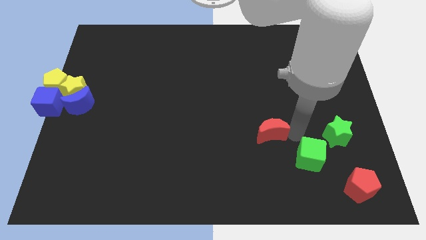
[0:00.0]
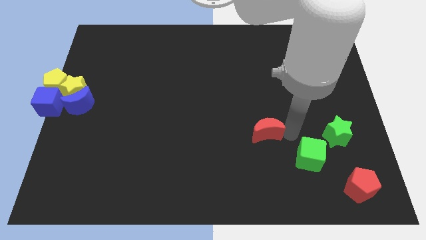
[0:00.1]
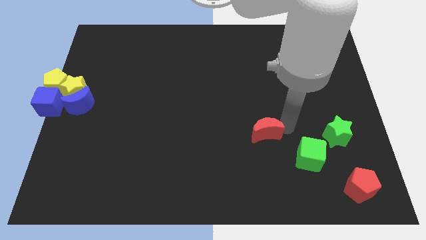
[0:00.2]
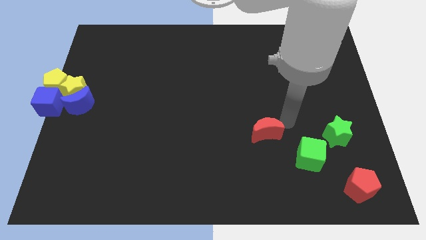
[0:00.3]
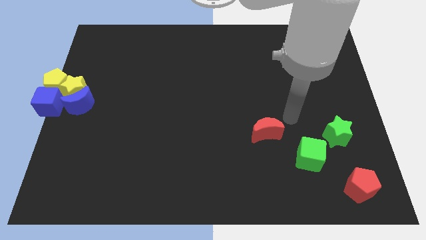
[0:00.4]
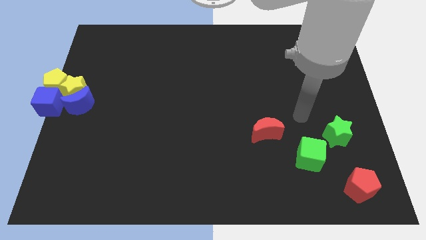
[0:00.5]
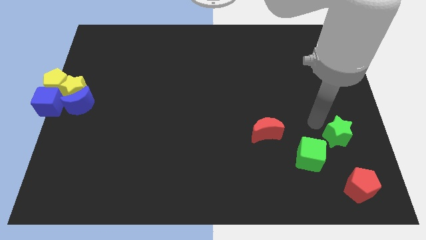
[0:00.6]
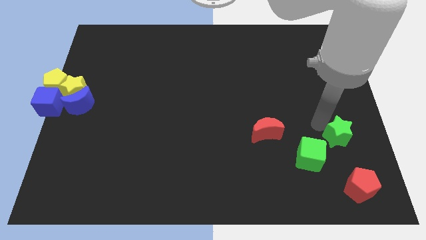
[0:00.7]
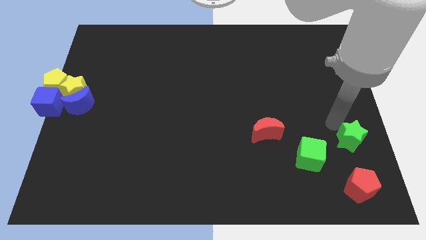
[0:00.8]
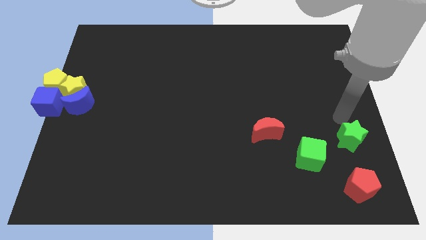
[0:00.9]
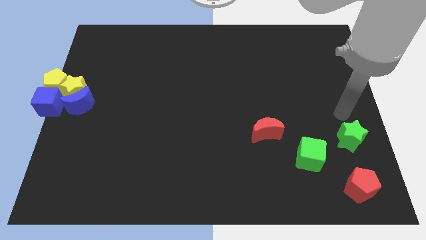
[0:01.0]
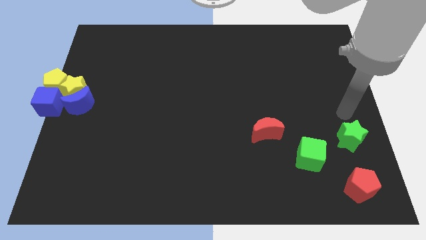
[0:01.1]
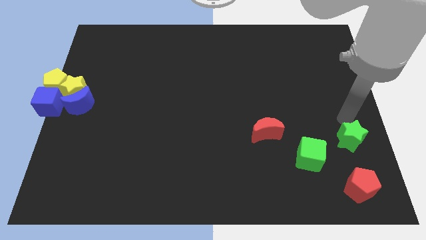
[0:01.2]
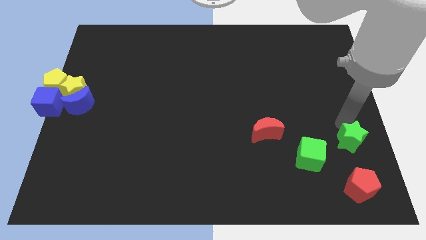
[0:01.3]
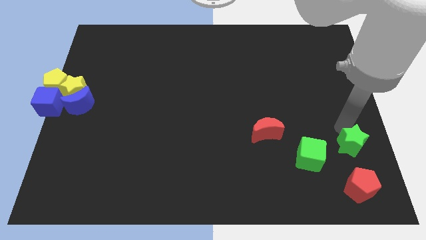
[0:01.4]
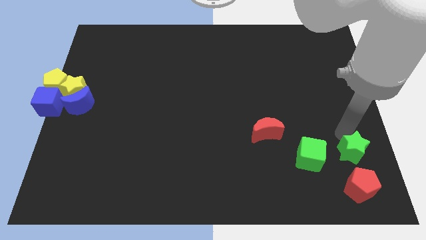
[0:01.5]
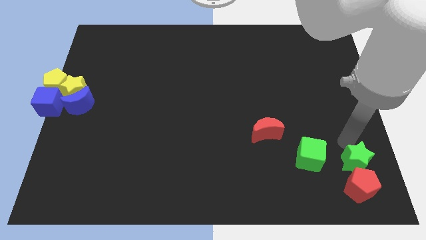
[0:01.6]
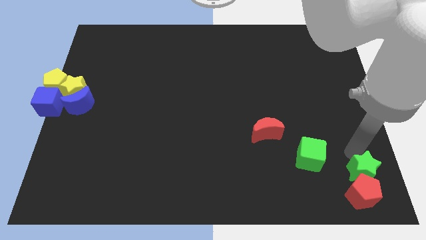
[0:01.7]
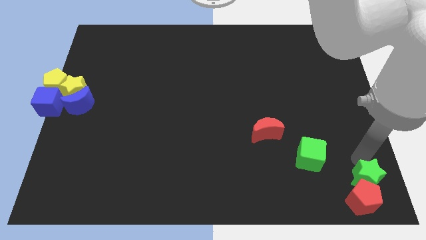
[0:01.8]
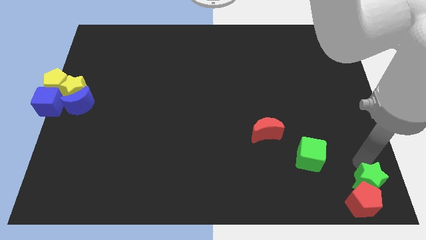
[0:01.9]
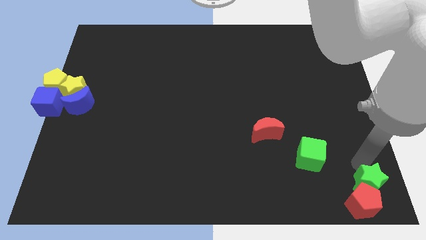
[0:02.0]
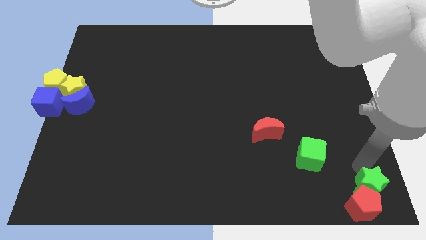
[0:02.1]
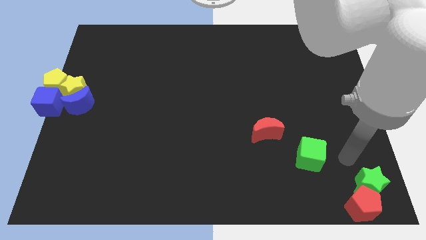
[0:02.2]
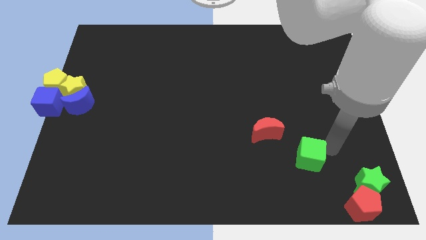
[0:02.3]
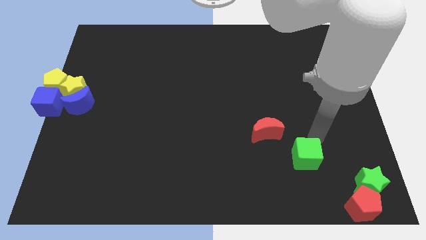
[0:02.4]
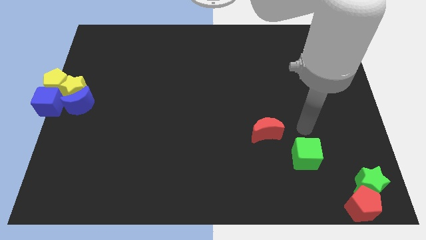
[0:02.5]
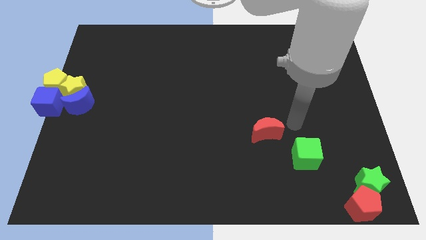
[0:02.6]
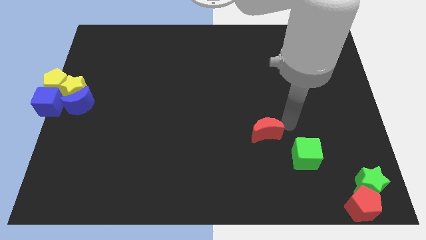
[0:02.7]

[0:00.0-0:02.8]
move the green star into the red pentagon

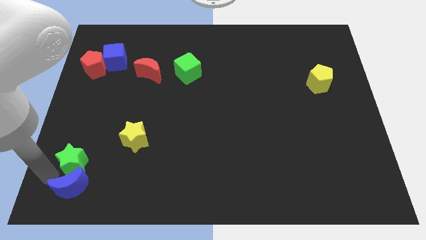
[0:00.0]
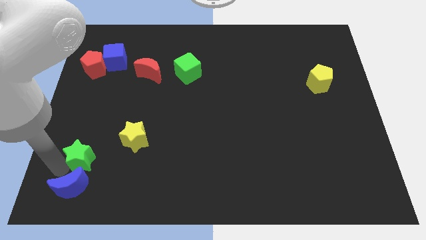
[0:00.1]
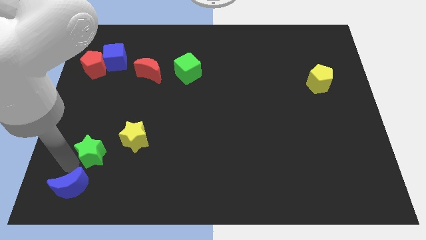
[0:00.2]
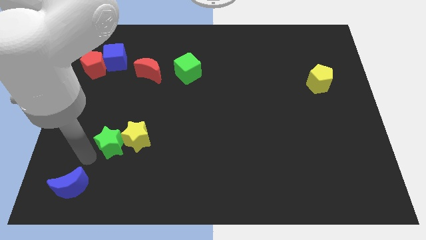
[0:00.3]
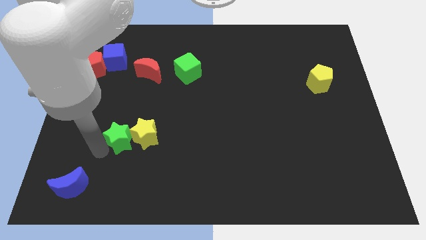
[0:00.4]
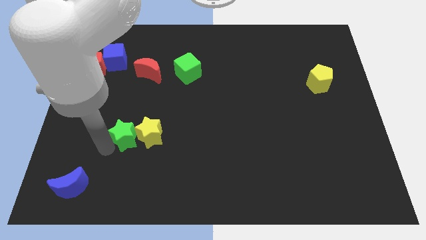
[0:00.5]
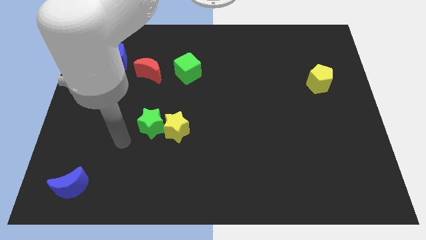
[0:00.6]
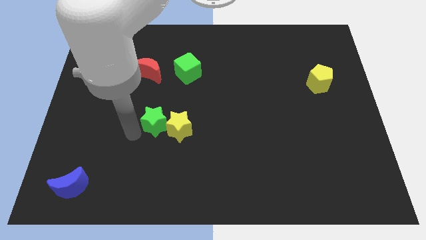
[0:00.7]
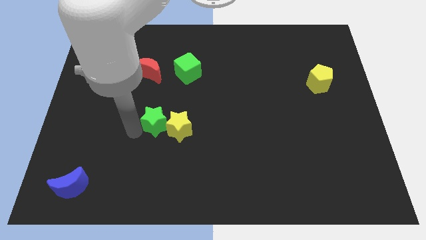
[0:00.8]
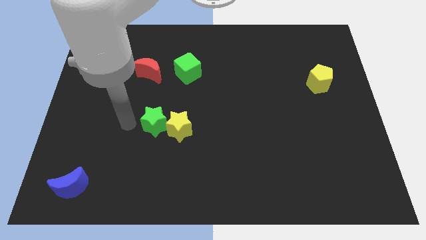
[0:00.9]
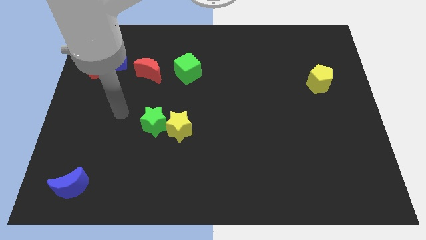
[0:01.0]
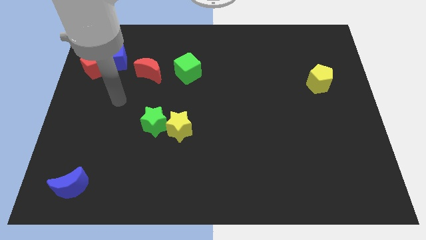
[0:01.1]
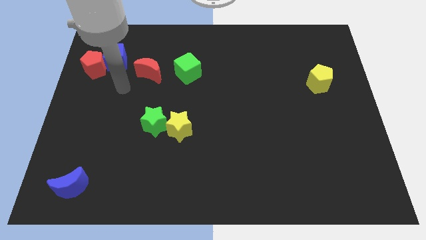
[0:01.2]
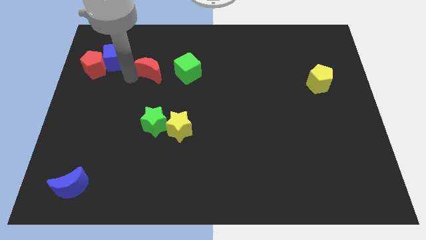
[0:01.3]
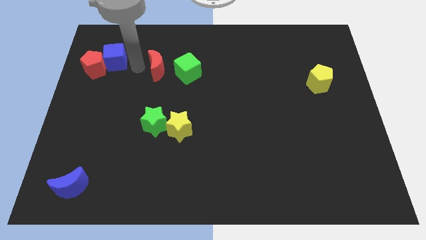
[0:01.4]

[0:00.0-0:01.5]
slide green star to the left of the yellow star

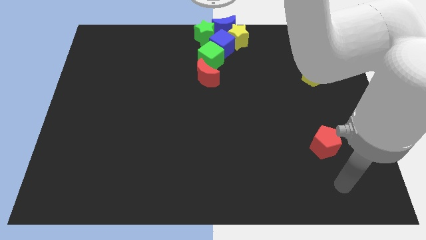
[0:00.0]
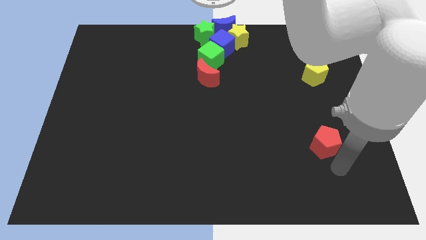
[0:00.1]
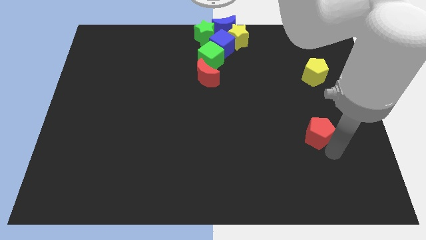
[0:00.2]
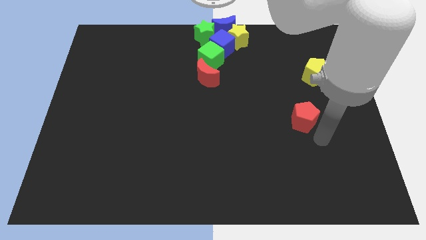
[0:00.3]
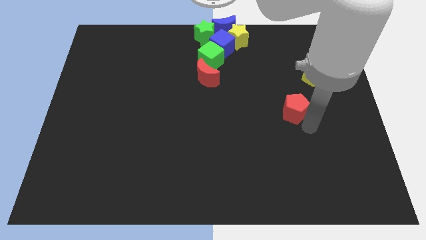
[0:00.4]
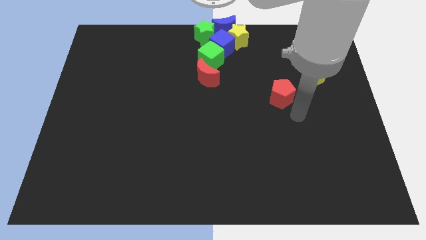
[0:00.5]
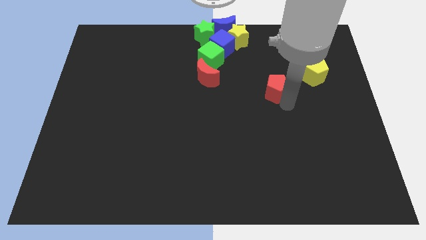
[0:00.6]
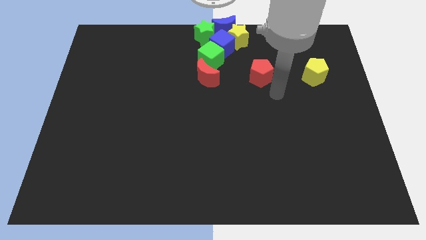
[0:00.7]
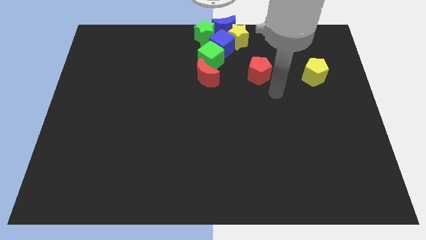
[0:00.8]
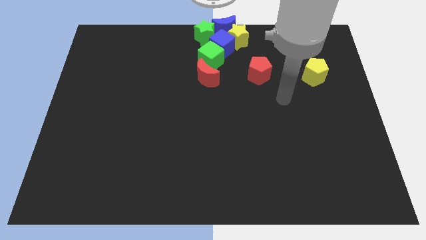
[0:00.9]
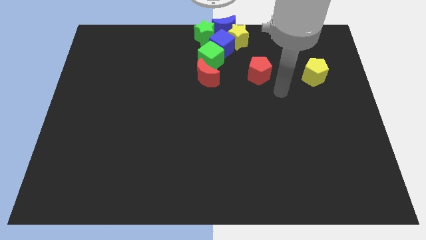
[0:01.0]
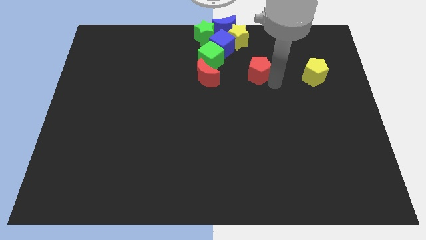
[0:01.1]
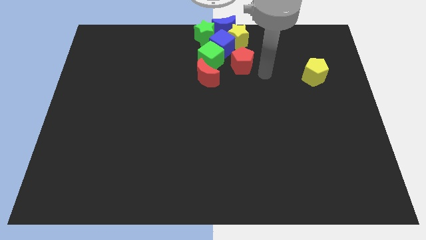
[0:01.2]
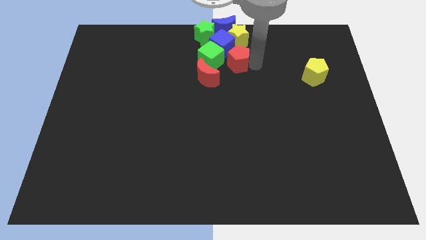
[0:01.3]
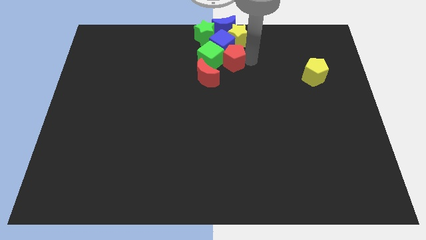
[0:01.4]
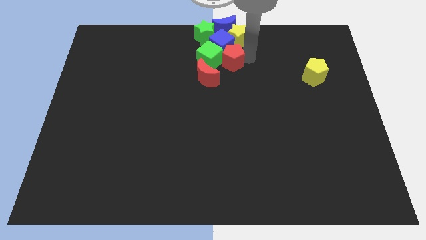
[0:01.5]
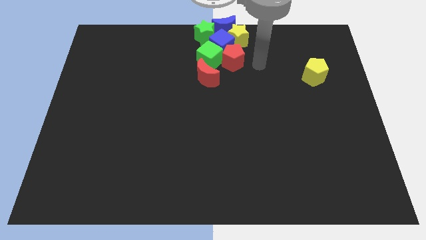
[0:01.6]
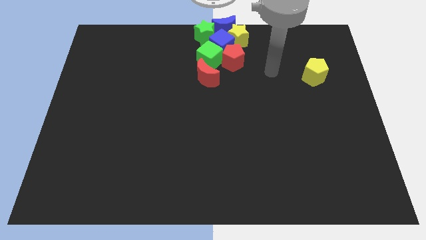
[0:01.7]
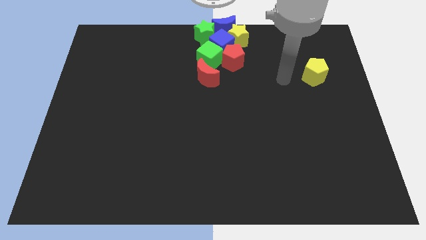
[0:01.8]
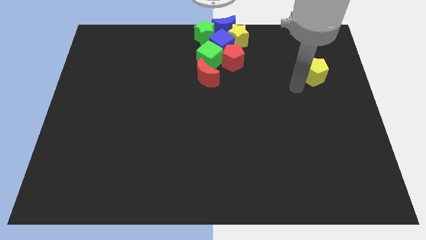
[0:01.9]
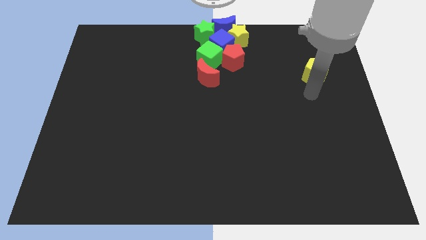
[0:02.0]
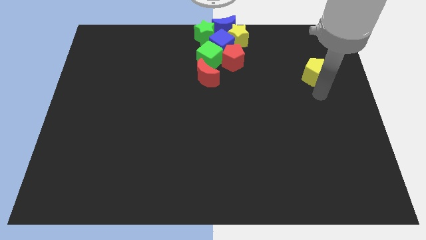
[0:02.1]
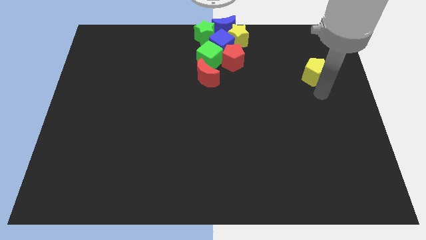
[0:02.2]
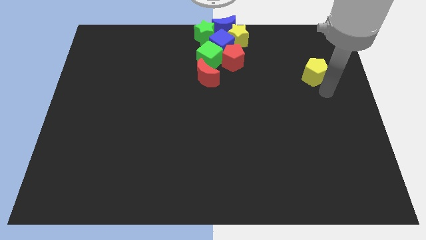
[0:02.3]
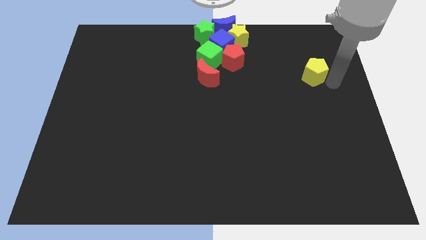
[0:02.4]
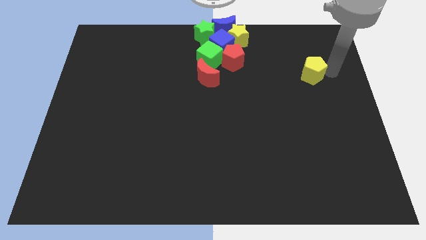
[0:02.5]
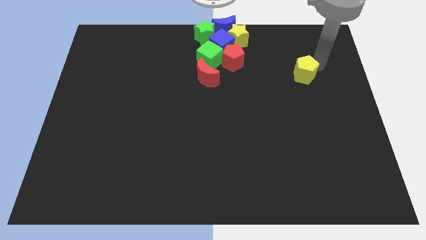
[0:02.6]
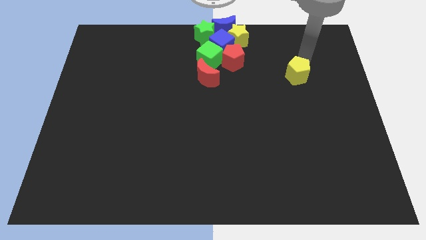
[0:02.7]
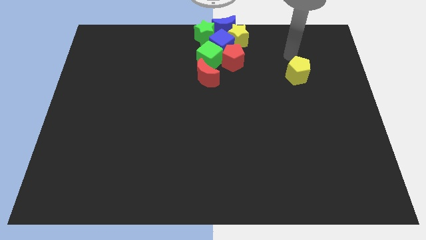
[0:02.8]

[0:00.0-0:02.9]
push slightly the blue cube and green cube with red pentagon towards the top center

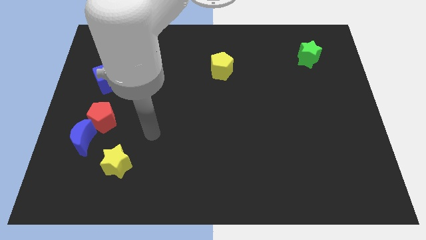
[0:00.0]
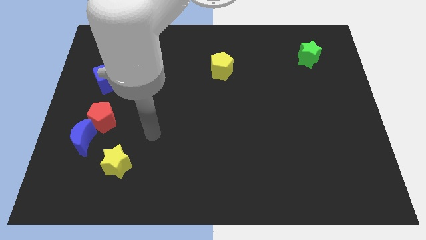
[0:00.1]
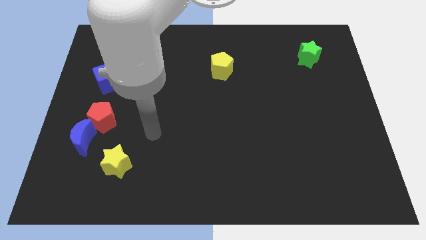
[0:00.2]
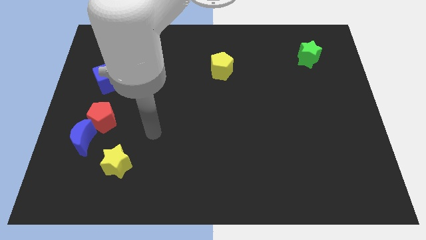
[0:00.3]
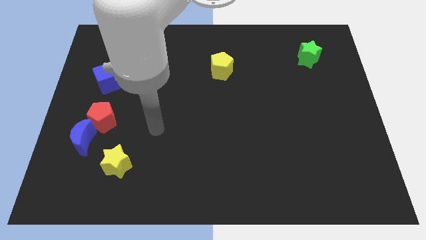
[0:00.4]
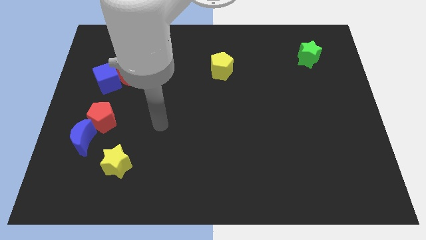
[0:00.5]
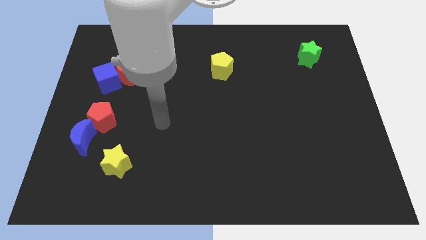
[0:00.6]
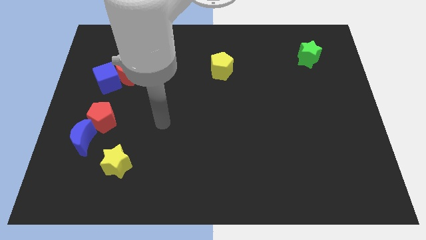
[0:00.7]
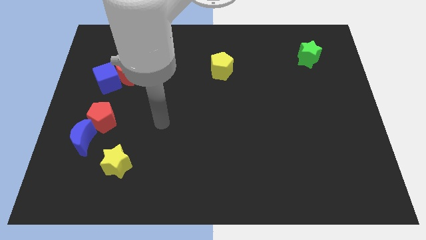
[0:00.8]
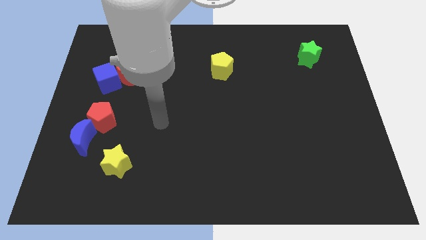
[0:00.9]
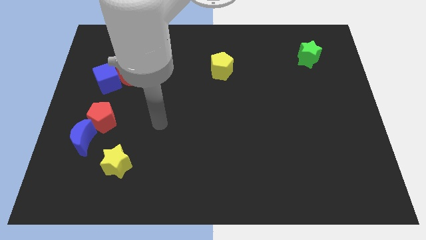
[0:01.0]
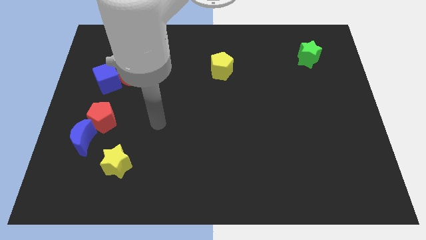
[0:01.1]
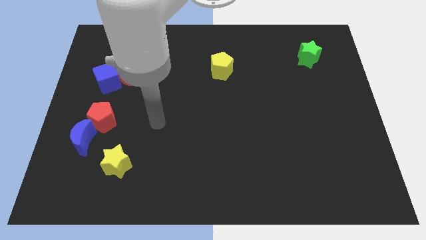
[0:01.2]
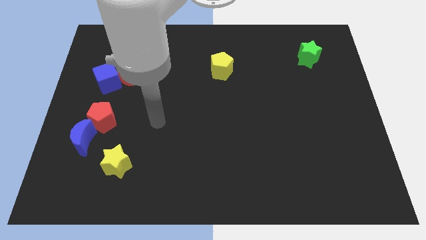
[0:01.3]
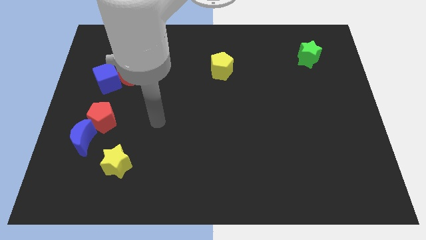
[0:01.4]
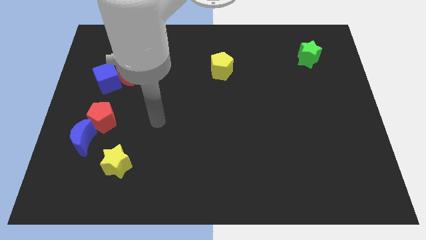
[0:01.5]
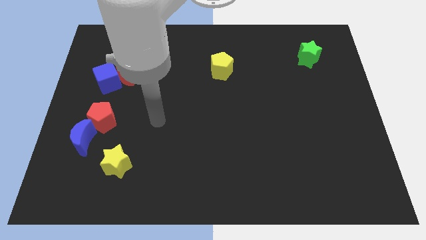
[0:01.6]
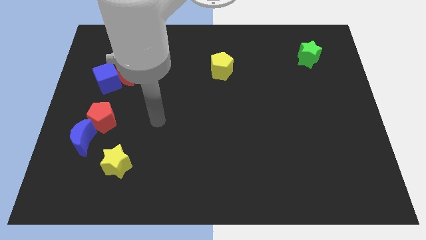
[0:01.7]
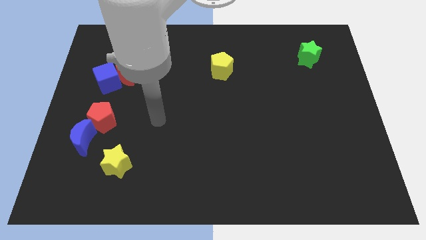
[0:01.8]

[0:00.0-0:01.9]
point your arm to the right of red pentagon
